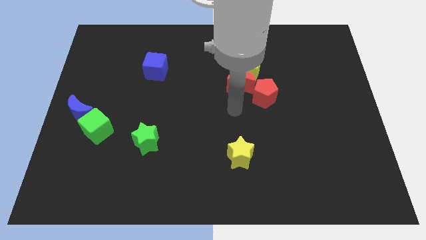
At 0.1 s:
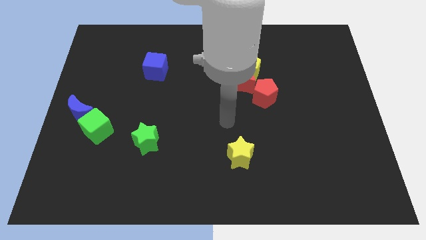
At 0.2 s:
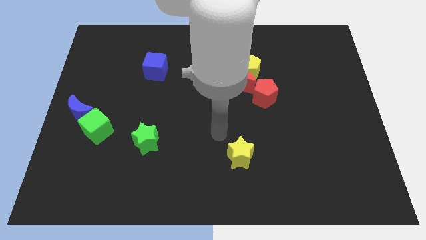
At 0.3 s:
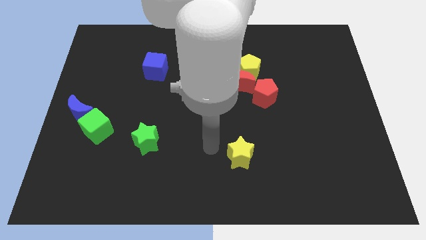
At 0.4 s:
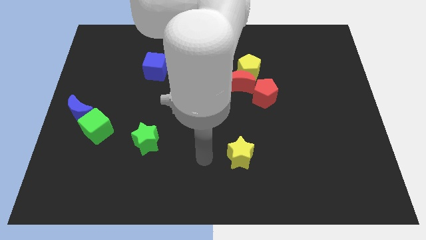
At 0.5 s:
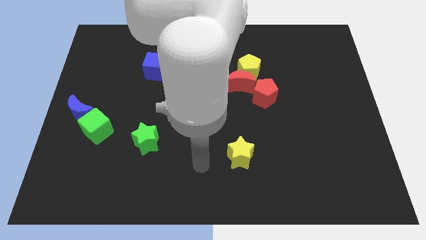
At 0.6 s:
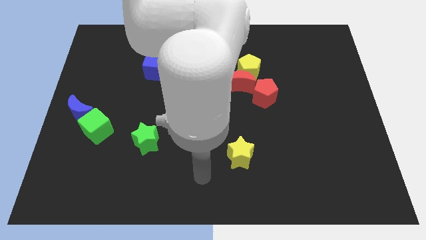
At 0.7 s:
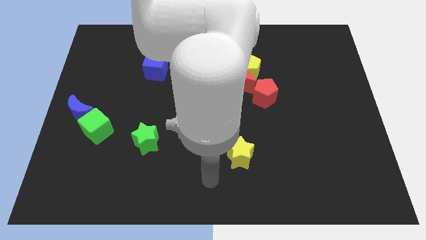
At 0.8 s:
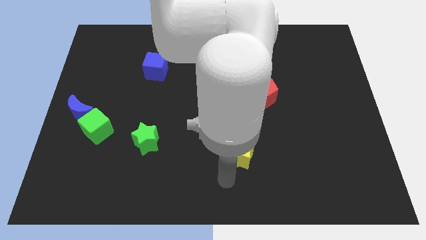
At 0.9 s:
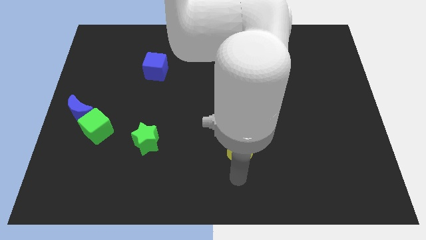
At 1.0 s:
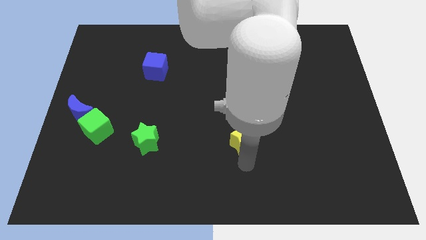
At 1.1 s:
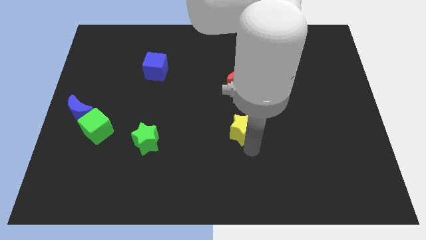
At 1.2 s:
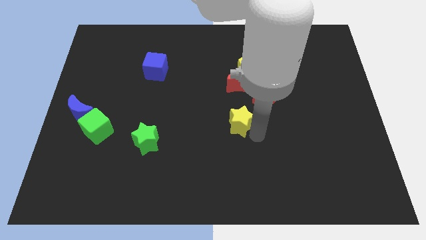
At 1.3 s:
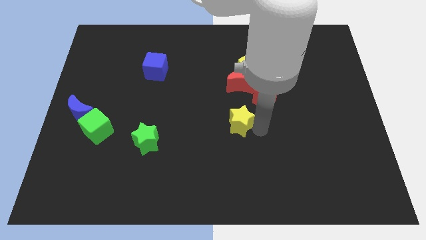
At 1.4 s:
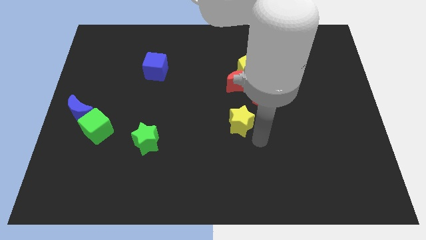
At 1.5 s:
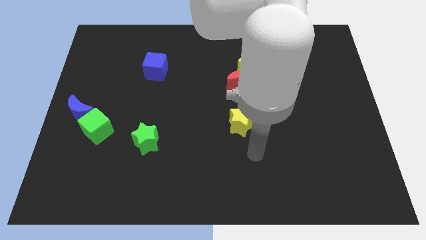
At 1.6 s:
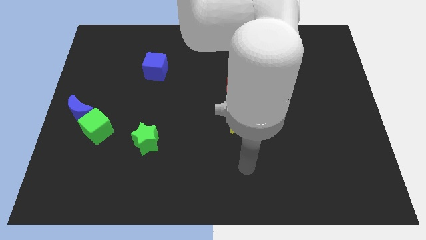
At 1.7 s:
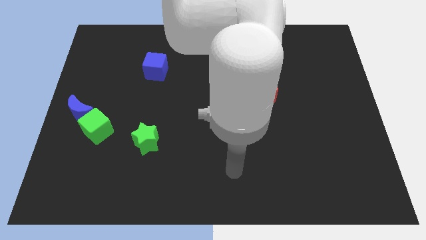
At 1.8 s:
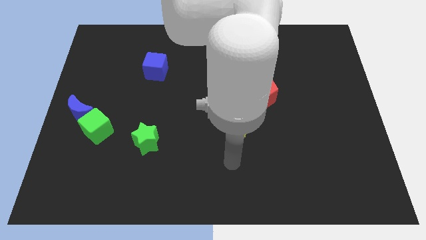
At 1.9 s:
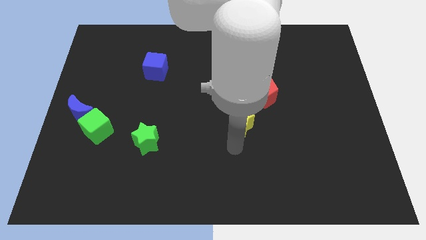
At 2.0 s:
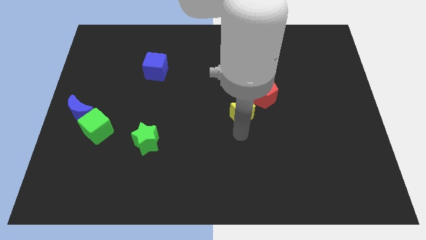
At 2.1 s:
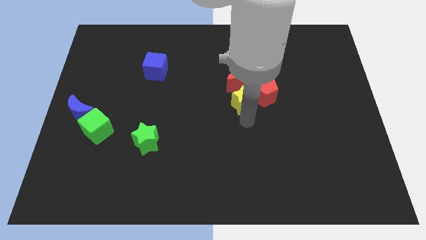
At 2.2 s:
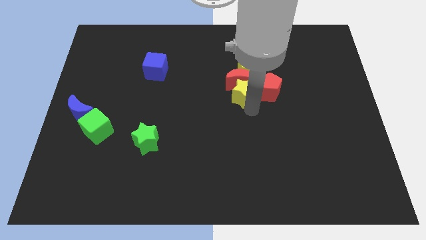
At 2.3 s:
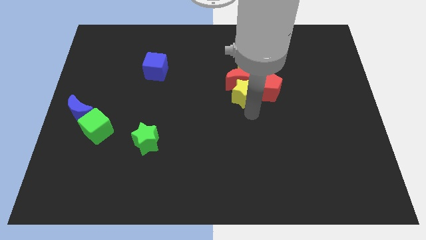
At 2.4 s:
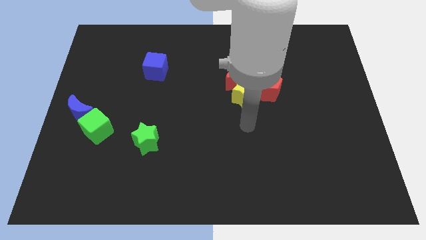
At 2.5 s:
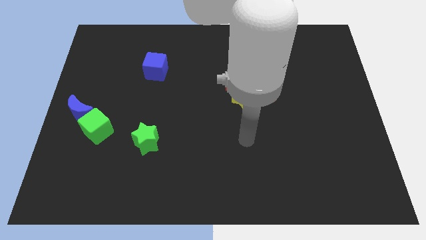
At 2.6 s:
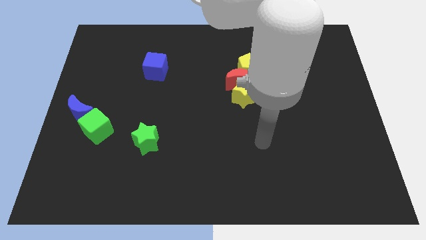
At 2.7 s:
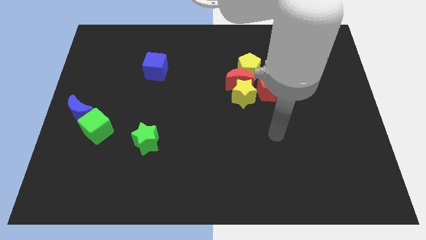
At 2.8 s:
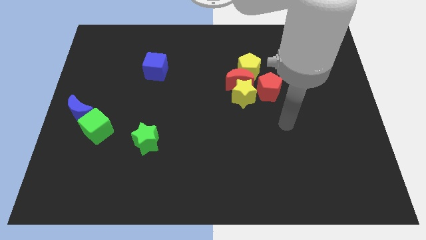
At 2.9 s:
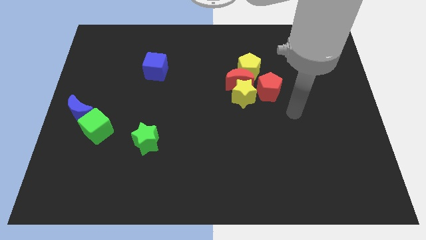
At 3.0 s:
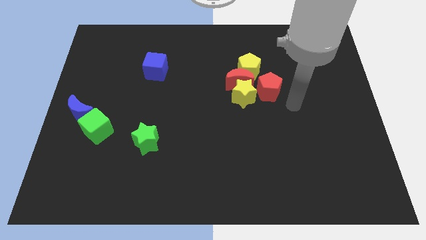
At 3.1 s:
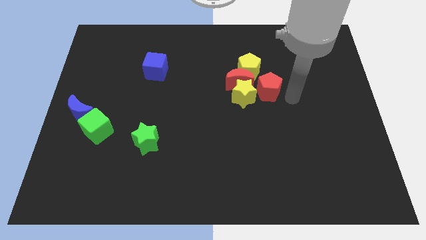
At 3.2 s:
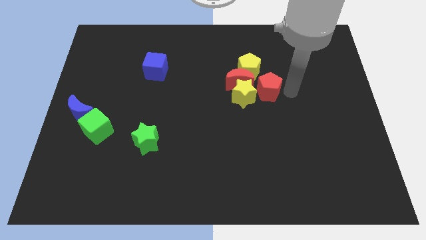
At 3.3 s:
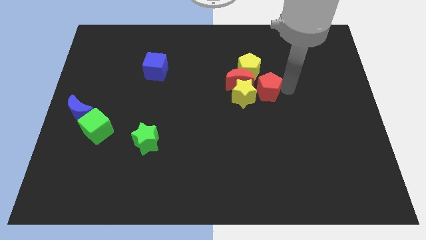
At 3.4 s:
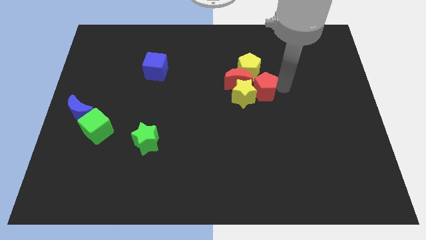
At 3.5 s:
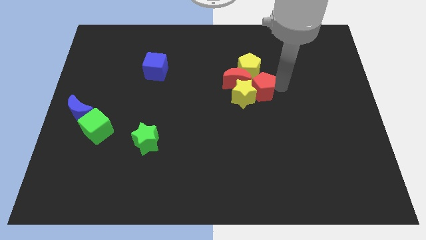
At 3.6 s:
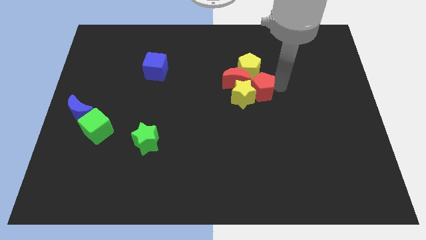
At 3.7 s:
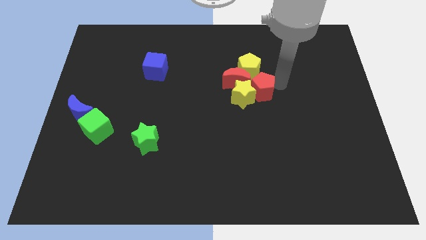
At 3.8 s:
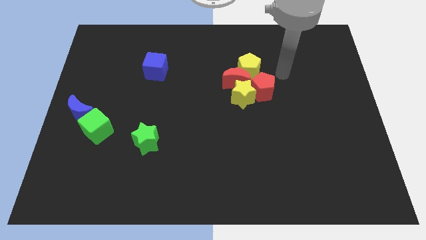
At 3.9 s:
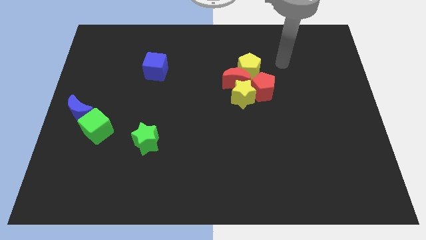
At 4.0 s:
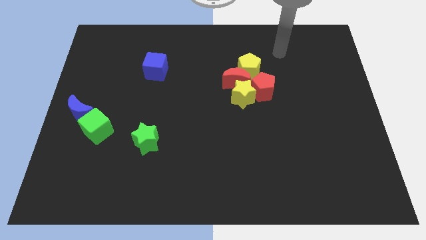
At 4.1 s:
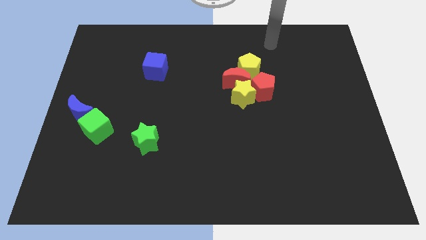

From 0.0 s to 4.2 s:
push the yellow and red blocks together to form a group

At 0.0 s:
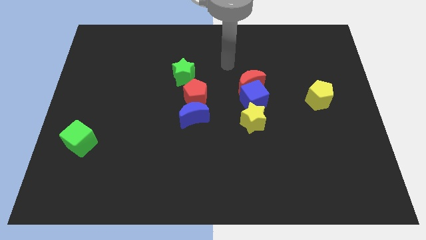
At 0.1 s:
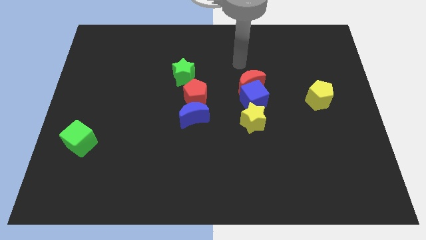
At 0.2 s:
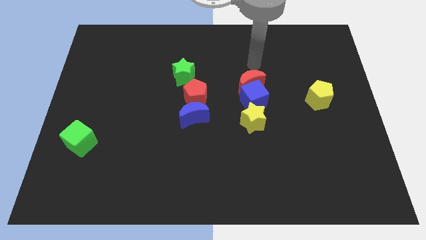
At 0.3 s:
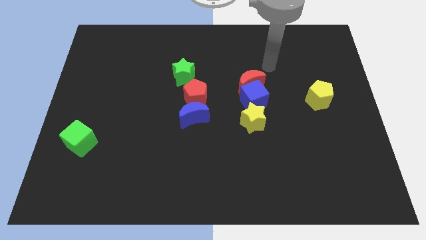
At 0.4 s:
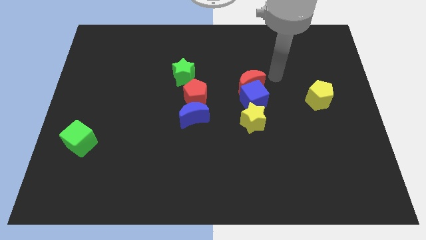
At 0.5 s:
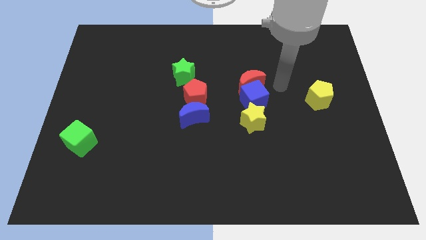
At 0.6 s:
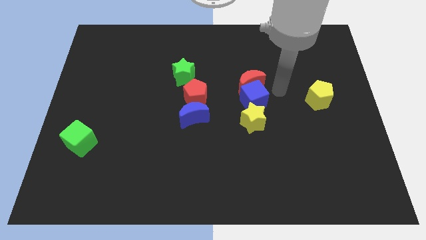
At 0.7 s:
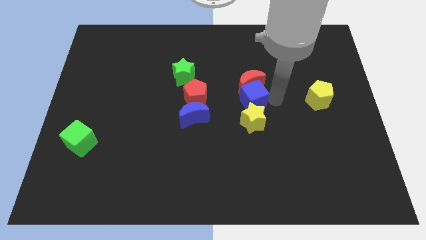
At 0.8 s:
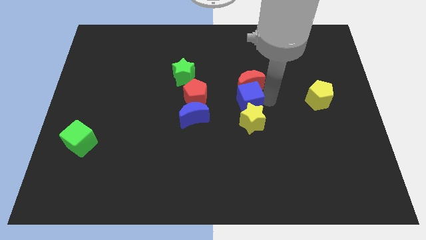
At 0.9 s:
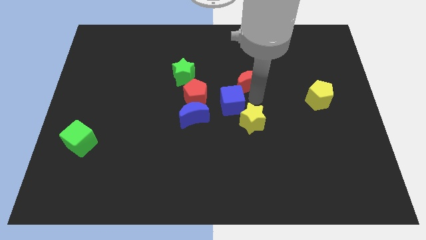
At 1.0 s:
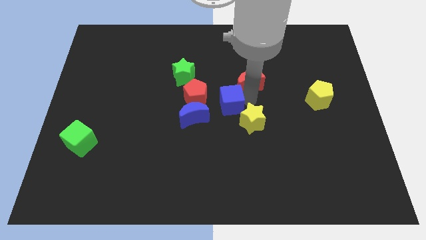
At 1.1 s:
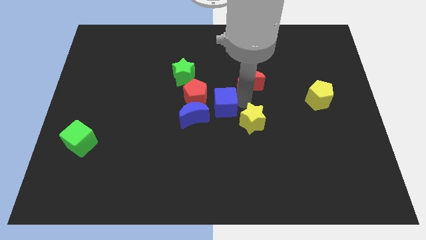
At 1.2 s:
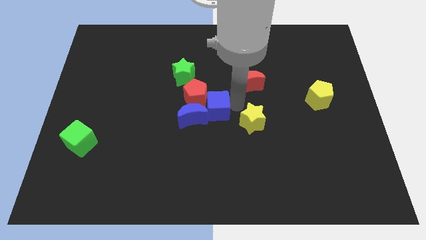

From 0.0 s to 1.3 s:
separate the blue cube from red crescent and yellow star

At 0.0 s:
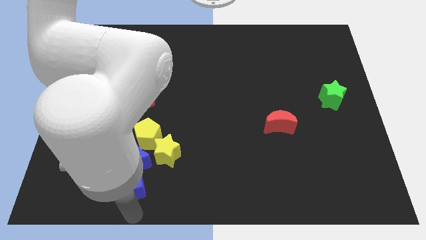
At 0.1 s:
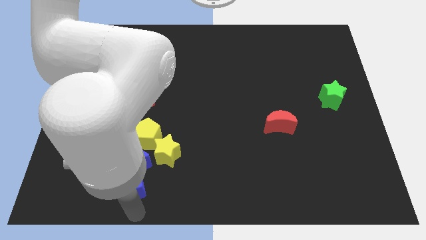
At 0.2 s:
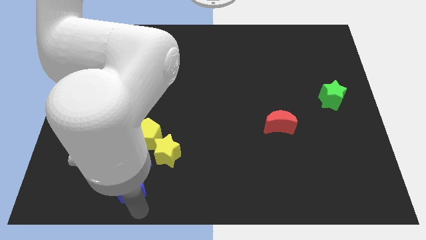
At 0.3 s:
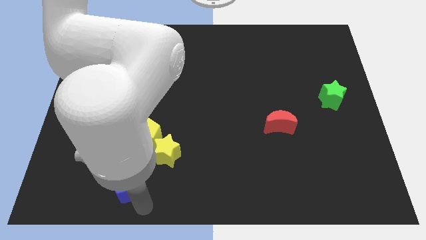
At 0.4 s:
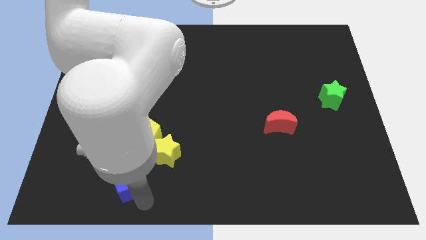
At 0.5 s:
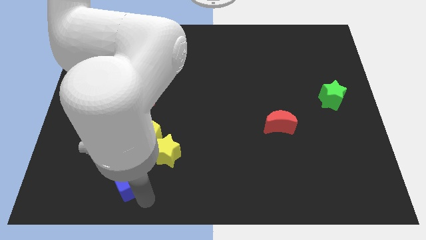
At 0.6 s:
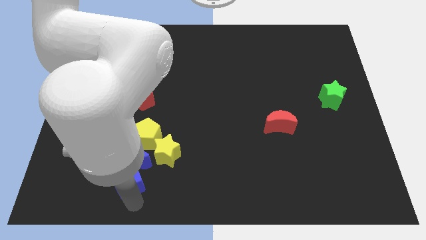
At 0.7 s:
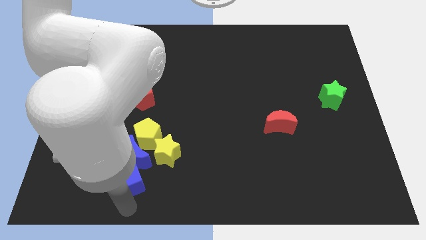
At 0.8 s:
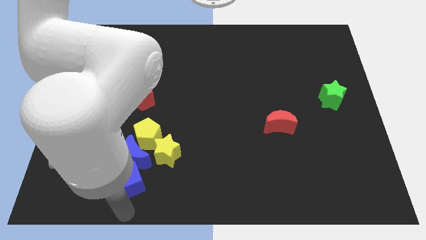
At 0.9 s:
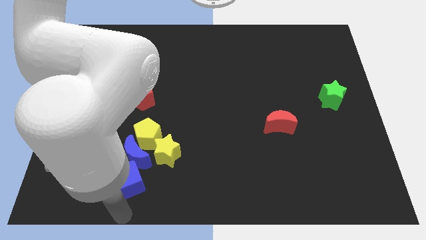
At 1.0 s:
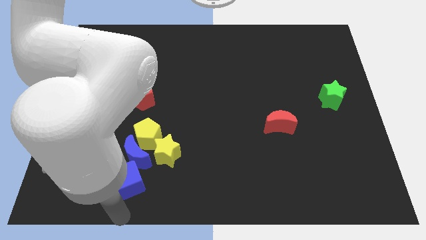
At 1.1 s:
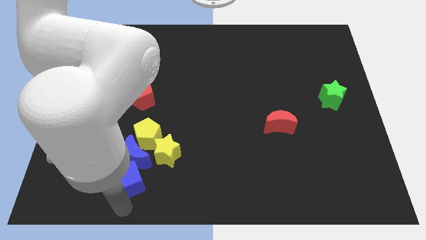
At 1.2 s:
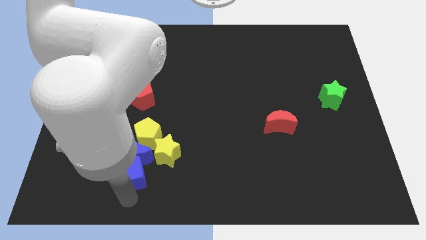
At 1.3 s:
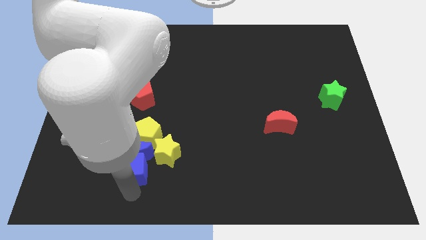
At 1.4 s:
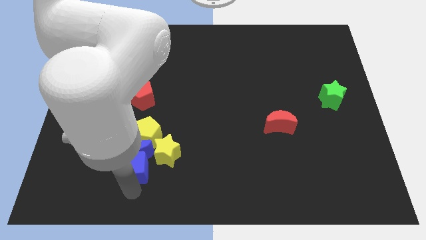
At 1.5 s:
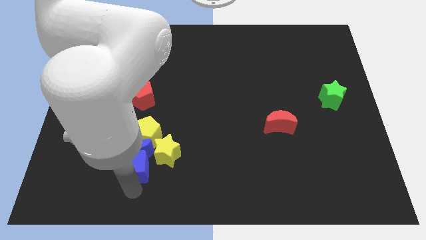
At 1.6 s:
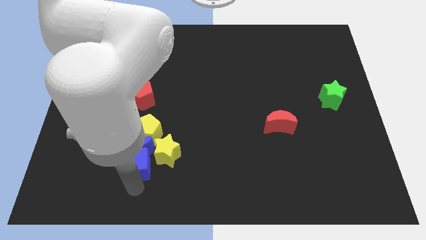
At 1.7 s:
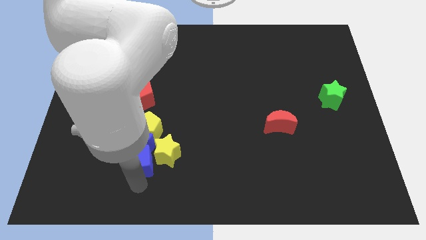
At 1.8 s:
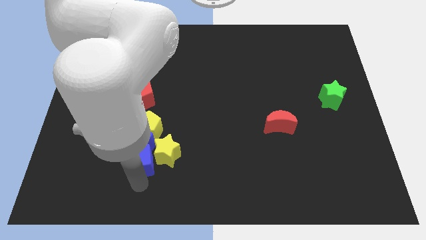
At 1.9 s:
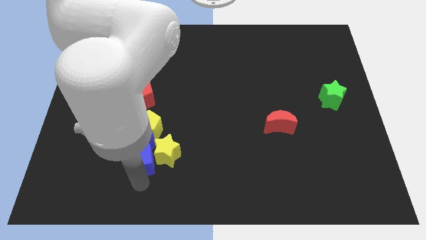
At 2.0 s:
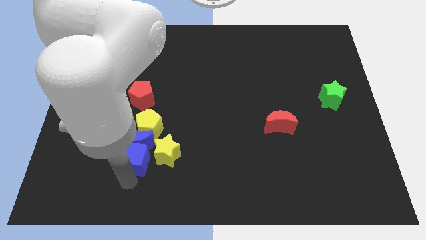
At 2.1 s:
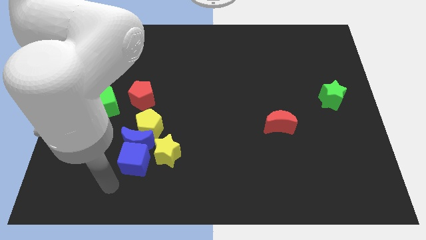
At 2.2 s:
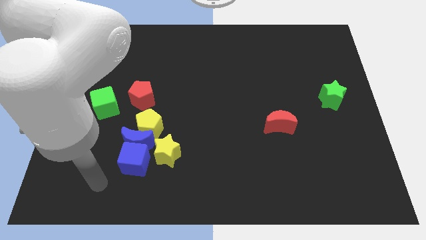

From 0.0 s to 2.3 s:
push the blue blocks into the bottom side of the yellow pentagon

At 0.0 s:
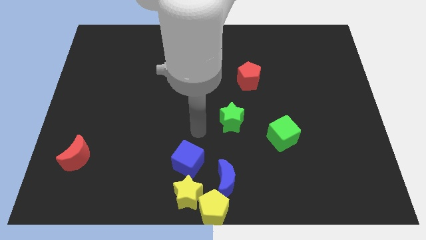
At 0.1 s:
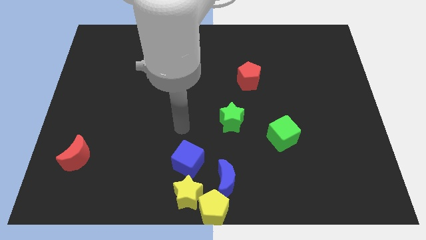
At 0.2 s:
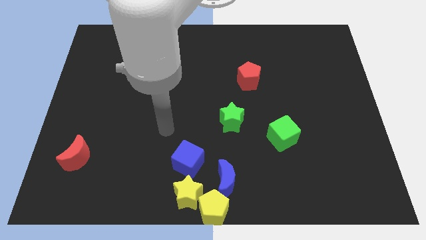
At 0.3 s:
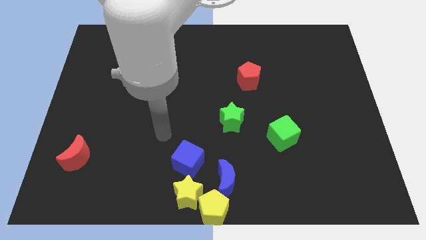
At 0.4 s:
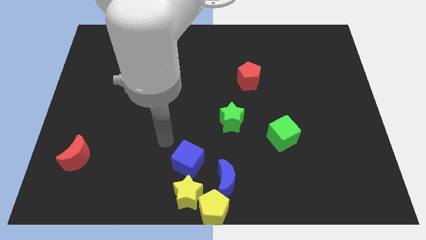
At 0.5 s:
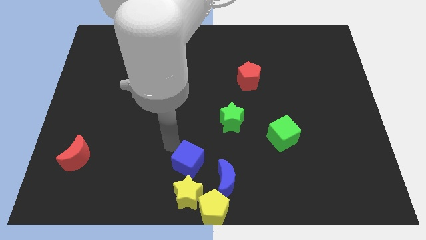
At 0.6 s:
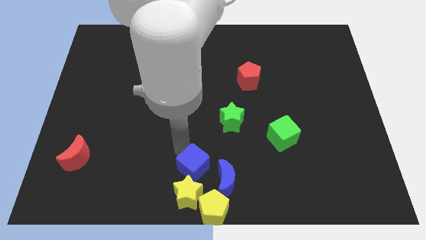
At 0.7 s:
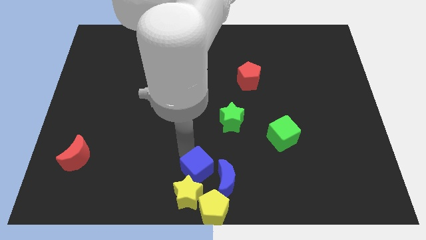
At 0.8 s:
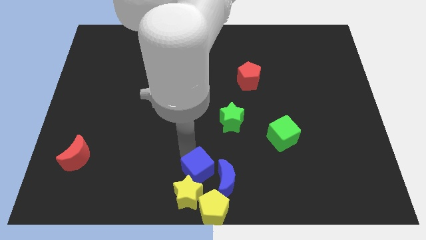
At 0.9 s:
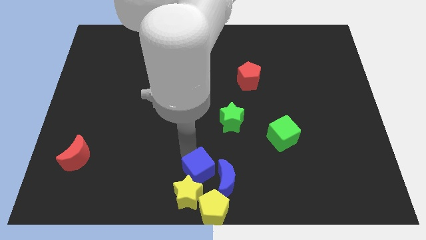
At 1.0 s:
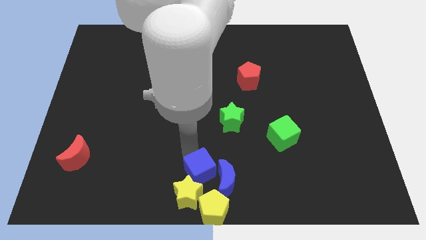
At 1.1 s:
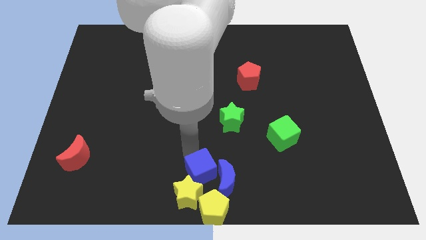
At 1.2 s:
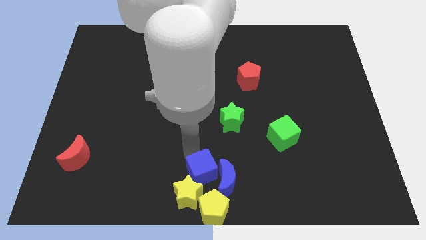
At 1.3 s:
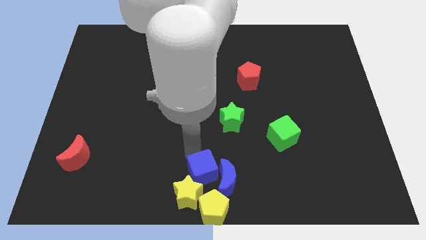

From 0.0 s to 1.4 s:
place blue cube to the left side of the blue moon
